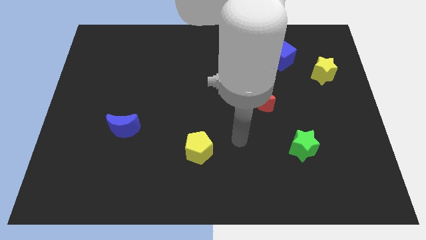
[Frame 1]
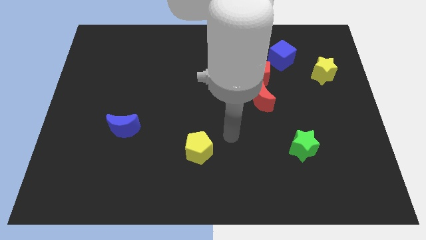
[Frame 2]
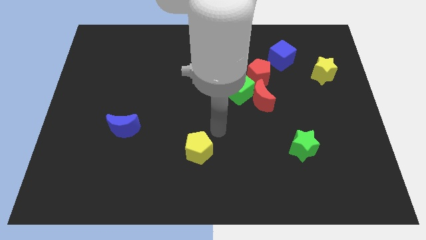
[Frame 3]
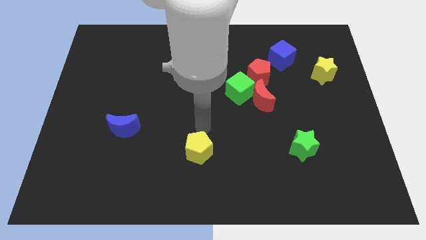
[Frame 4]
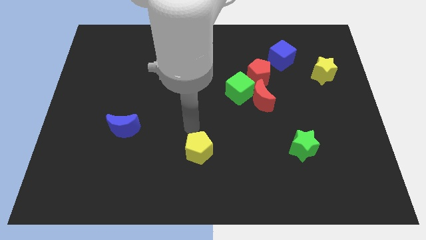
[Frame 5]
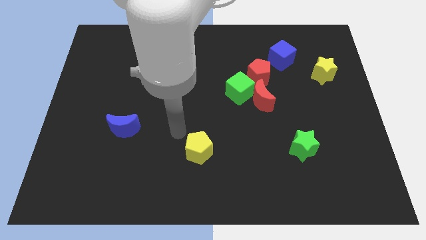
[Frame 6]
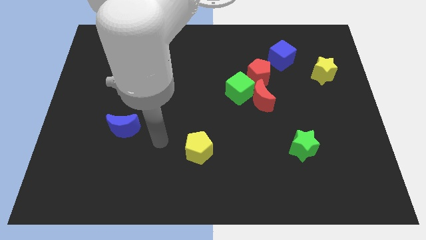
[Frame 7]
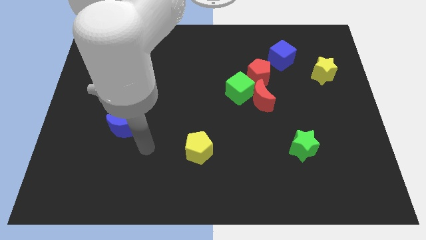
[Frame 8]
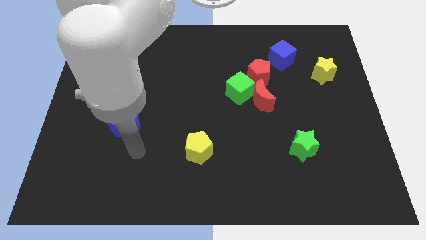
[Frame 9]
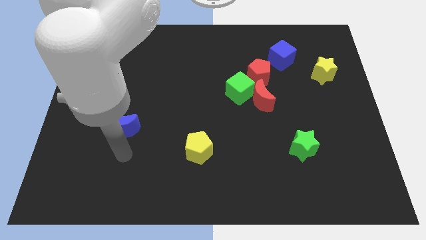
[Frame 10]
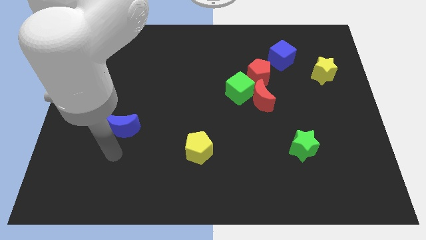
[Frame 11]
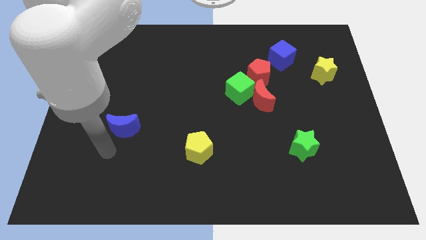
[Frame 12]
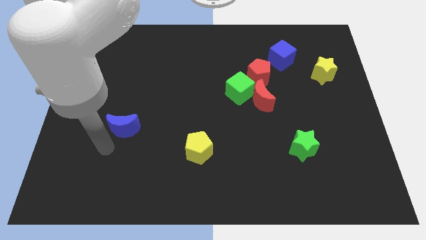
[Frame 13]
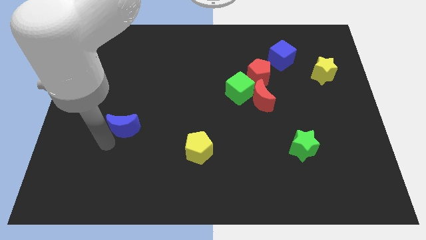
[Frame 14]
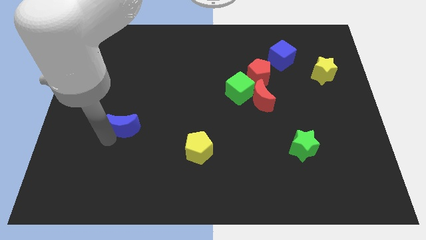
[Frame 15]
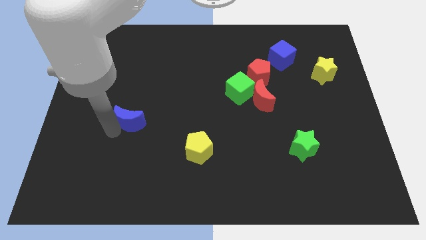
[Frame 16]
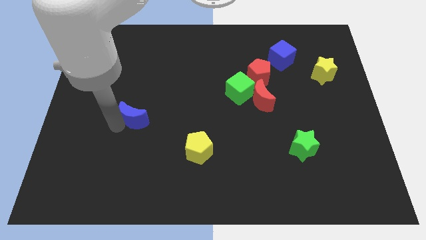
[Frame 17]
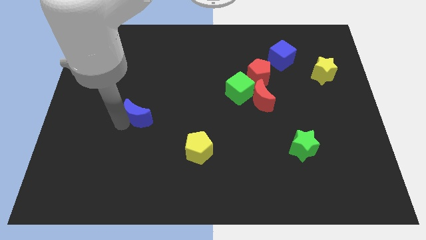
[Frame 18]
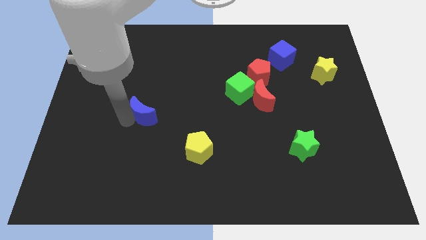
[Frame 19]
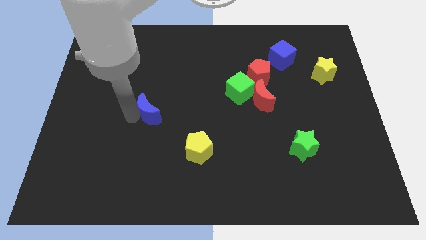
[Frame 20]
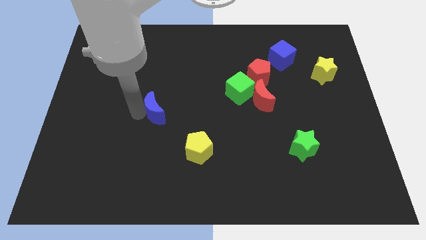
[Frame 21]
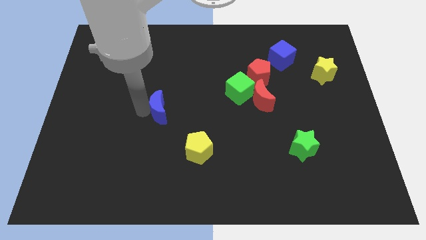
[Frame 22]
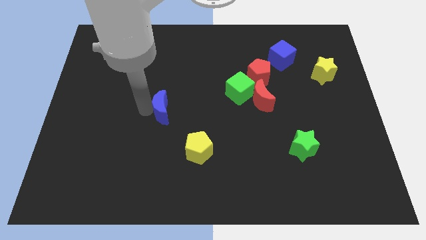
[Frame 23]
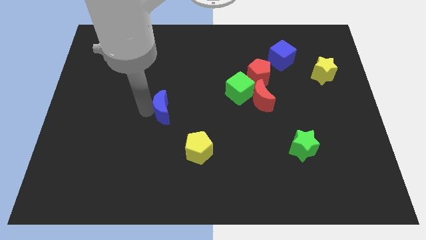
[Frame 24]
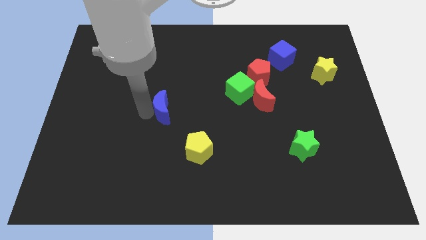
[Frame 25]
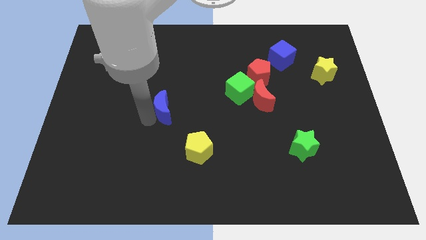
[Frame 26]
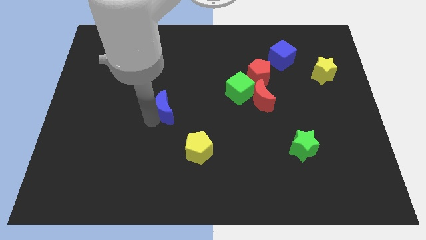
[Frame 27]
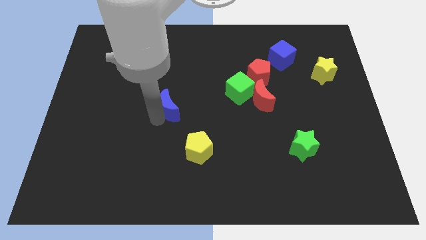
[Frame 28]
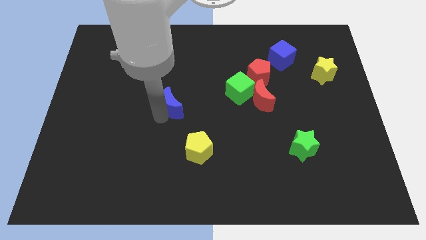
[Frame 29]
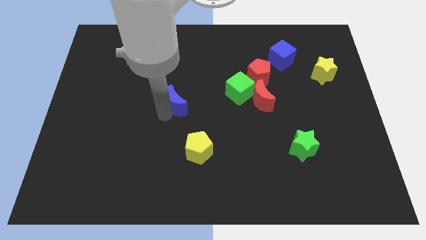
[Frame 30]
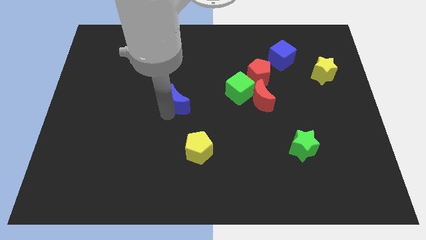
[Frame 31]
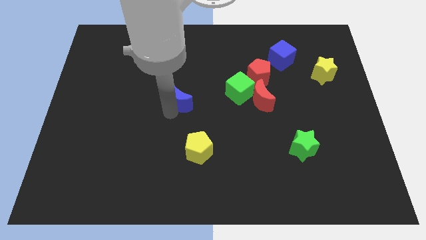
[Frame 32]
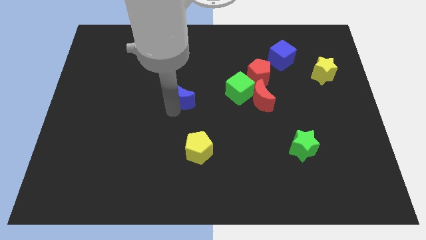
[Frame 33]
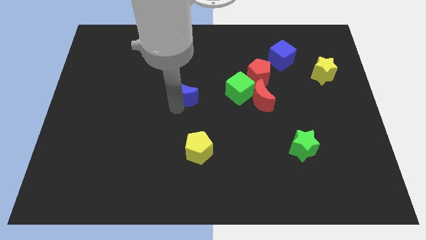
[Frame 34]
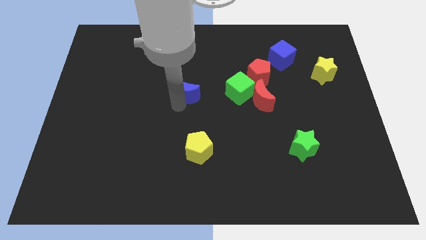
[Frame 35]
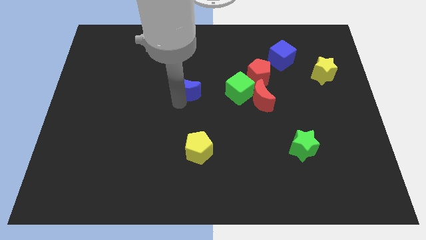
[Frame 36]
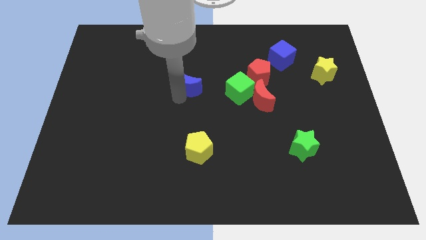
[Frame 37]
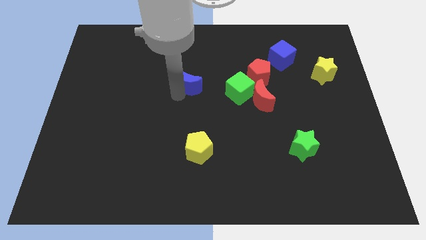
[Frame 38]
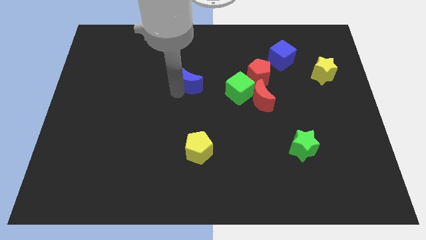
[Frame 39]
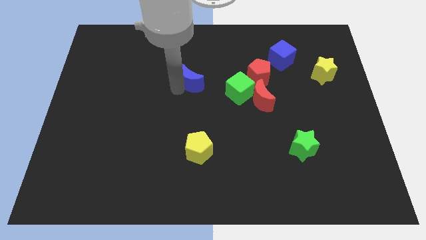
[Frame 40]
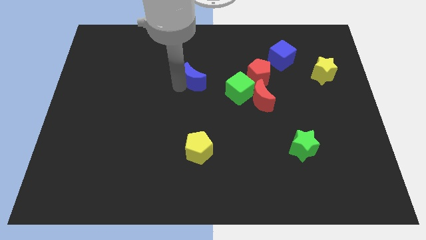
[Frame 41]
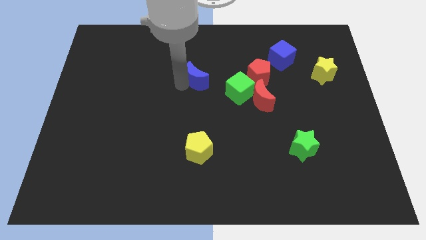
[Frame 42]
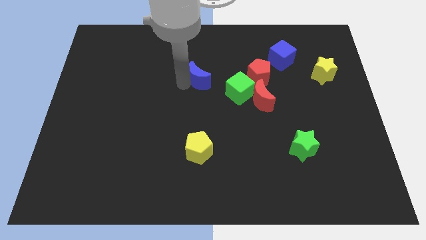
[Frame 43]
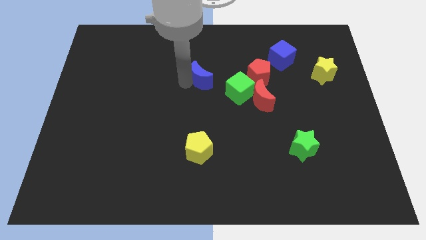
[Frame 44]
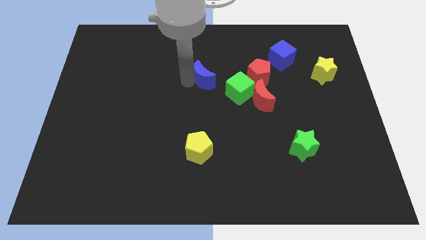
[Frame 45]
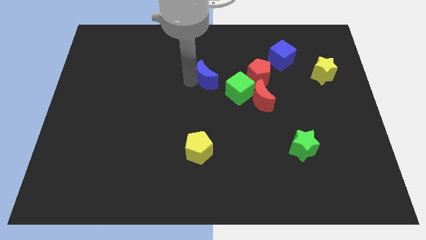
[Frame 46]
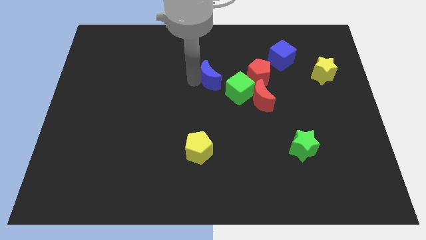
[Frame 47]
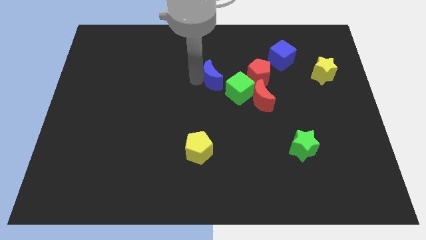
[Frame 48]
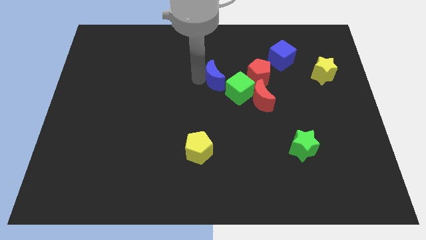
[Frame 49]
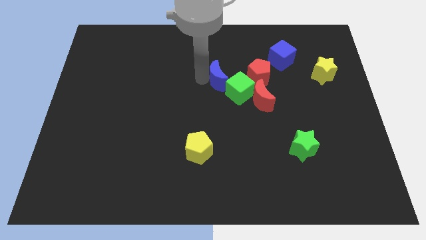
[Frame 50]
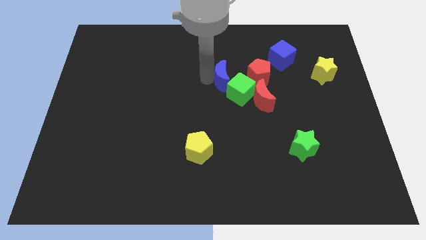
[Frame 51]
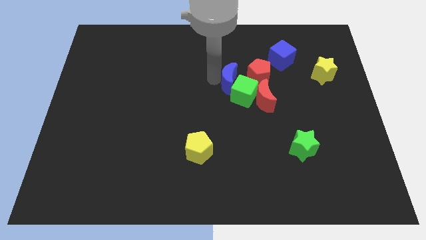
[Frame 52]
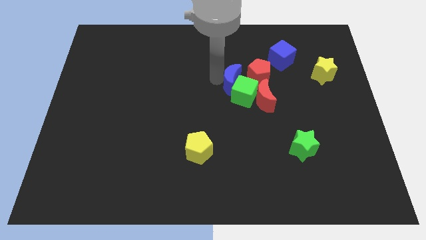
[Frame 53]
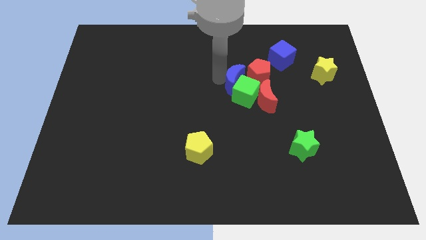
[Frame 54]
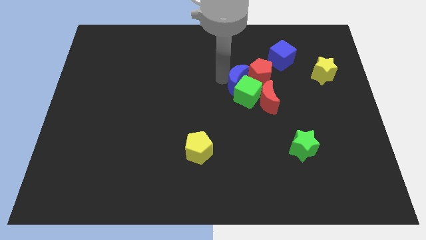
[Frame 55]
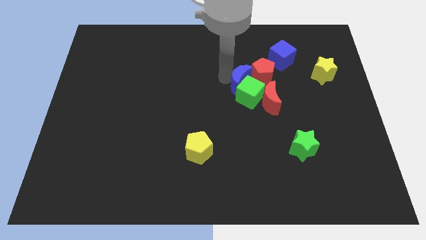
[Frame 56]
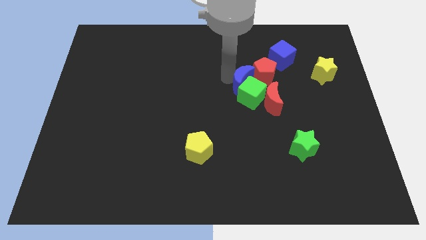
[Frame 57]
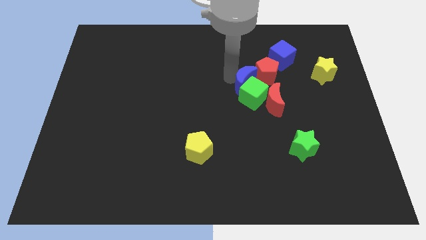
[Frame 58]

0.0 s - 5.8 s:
move the blue moon next to the red pentagon

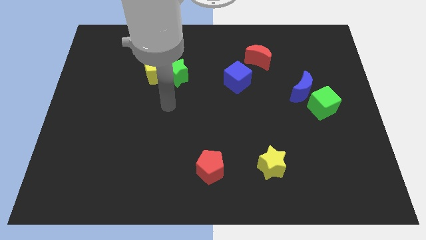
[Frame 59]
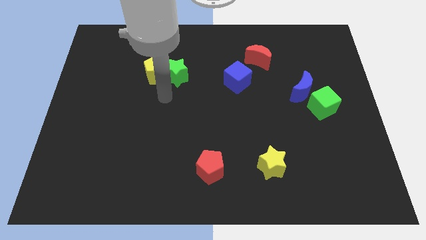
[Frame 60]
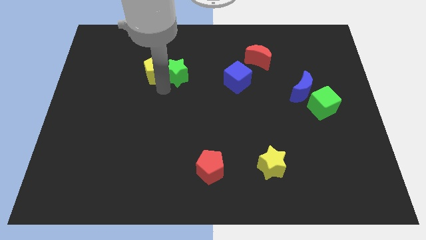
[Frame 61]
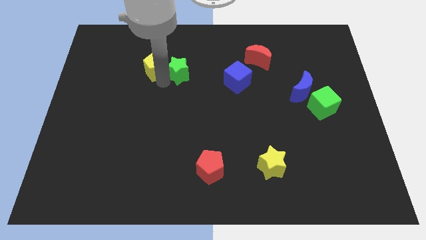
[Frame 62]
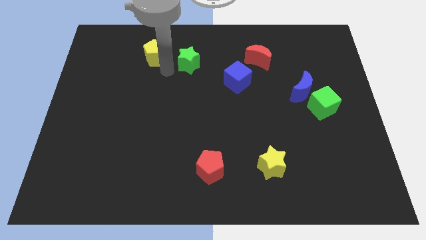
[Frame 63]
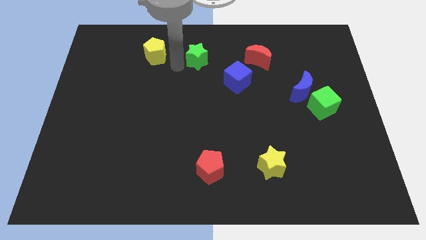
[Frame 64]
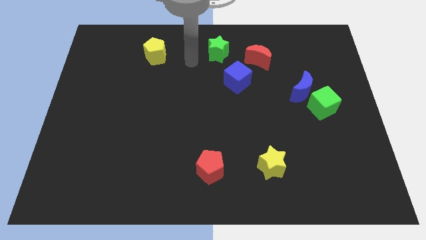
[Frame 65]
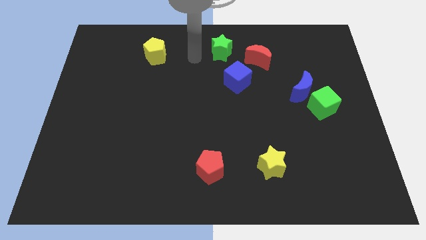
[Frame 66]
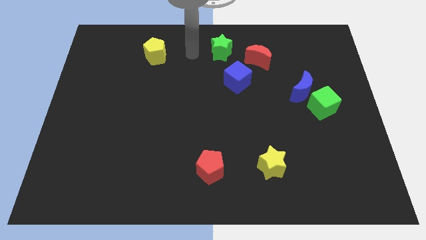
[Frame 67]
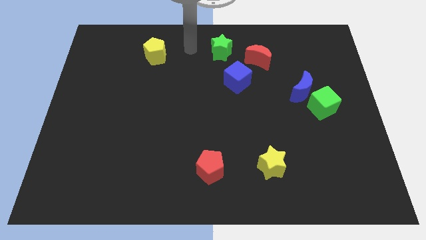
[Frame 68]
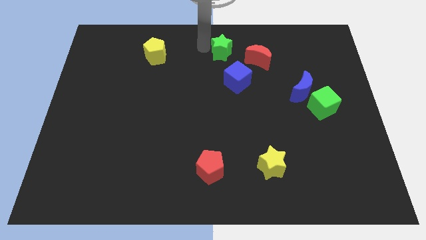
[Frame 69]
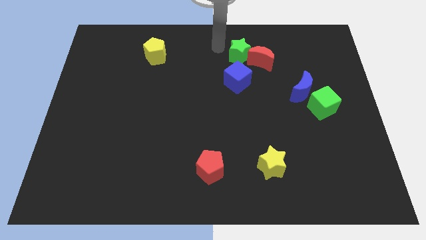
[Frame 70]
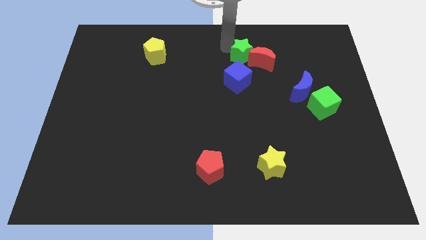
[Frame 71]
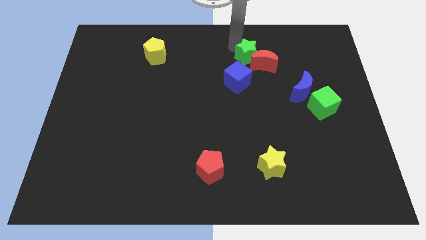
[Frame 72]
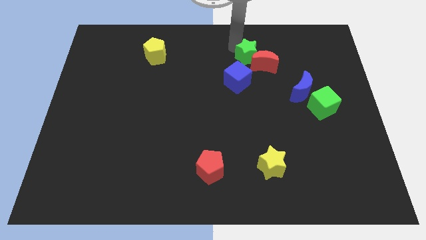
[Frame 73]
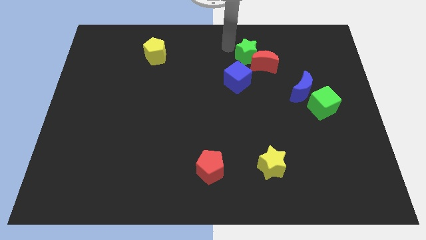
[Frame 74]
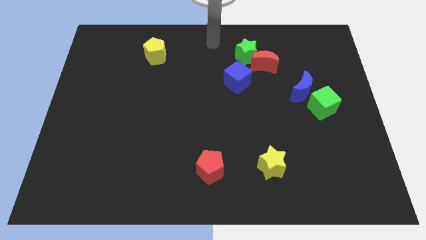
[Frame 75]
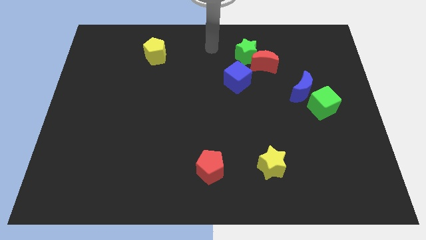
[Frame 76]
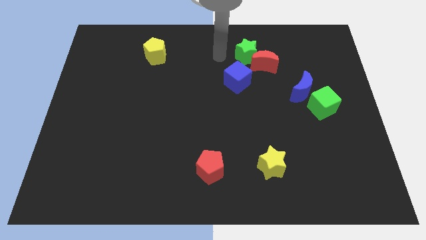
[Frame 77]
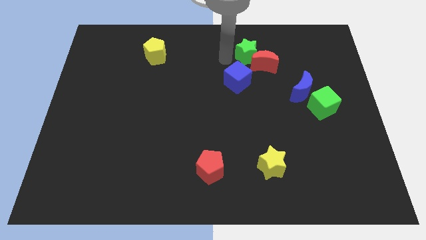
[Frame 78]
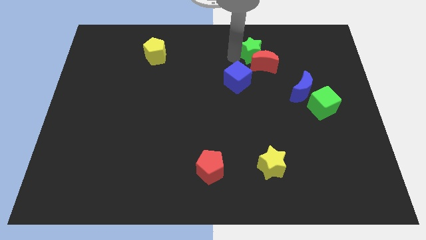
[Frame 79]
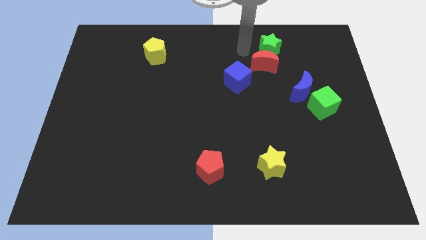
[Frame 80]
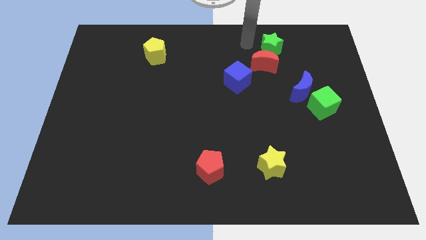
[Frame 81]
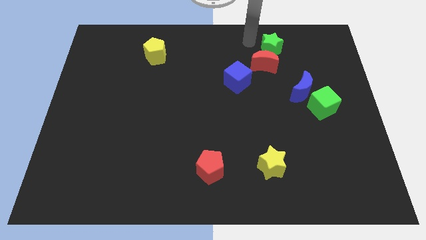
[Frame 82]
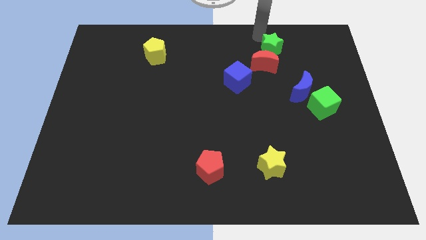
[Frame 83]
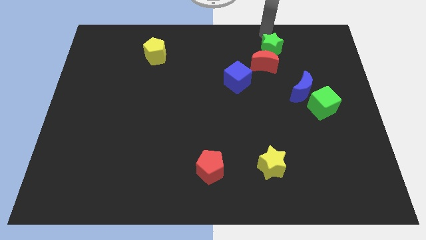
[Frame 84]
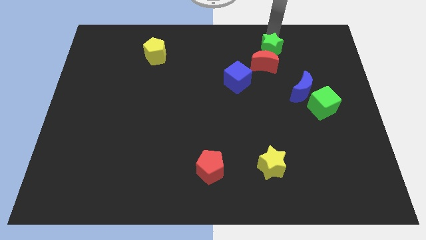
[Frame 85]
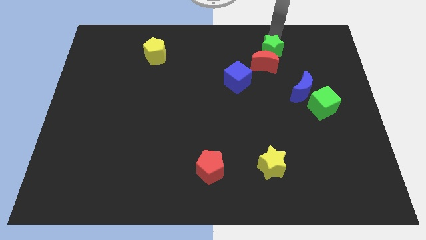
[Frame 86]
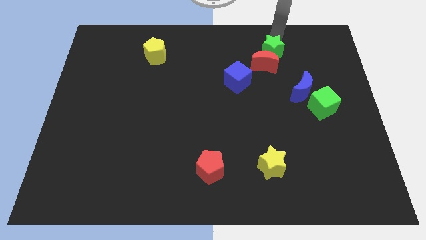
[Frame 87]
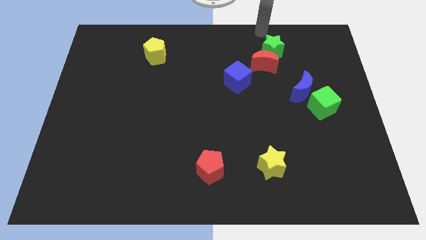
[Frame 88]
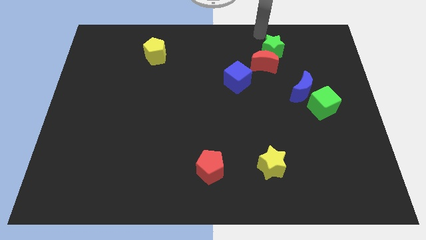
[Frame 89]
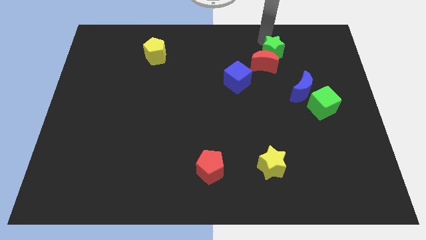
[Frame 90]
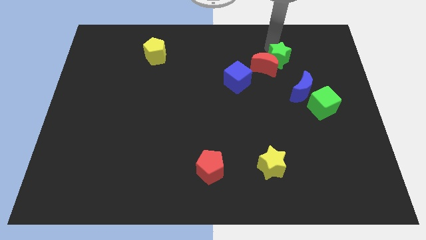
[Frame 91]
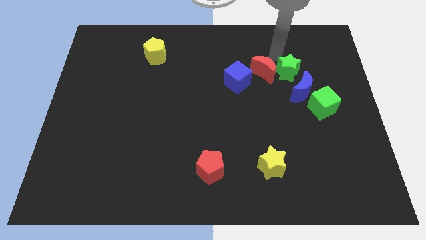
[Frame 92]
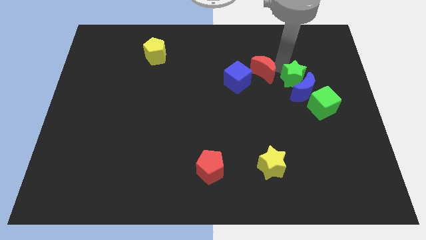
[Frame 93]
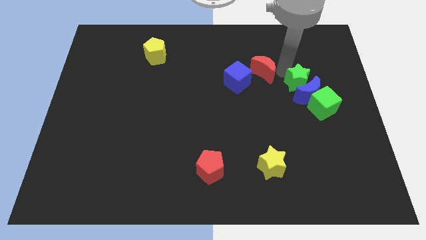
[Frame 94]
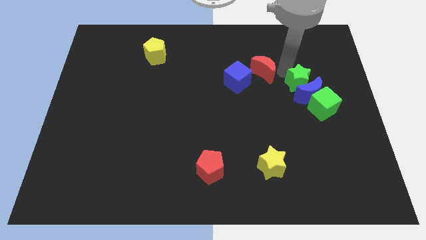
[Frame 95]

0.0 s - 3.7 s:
push the green star to the blue moon
